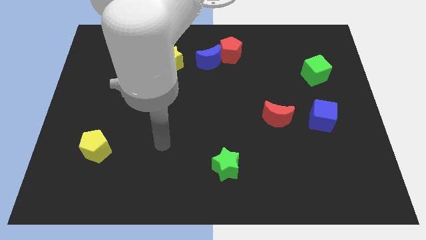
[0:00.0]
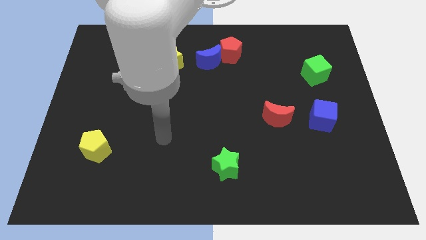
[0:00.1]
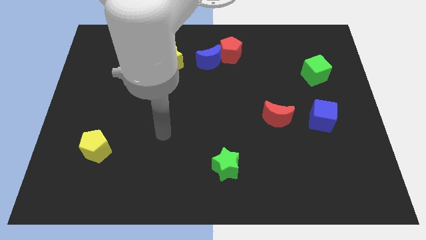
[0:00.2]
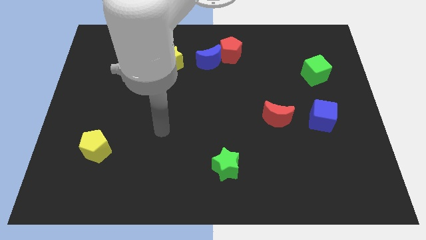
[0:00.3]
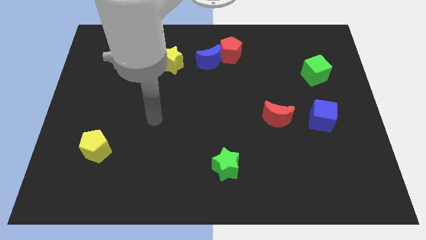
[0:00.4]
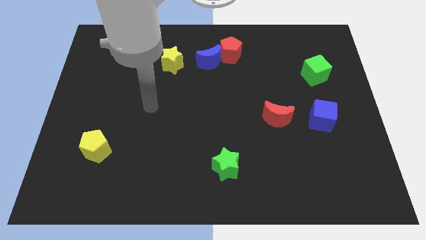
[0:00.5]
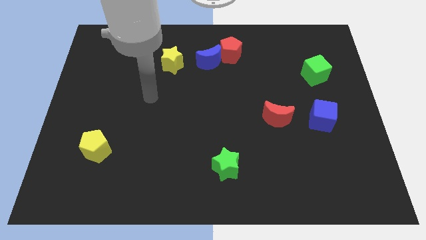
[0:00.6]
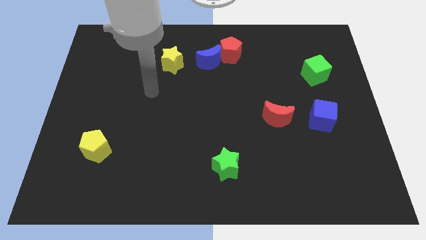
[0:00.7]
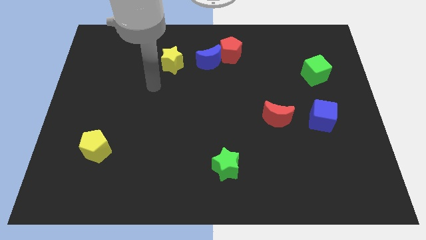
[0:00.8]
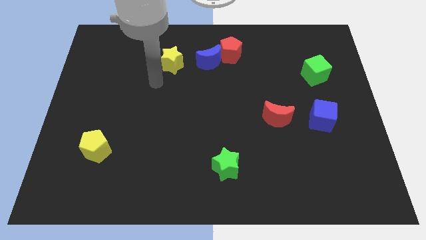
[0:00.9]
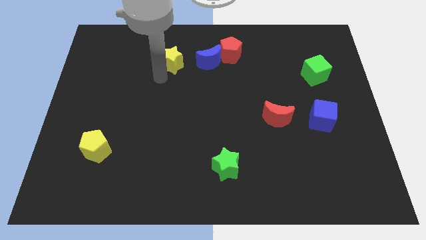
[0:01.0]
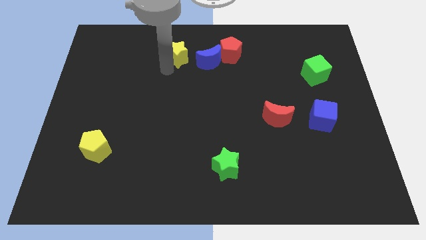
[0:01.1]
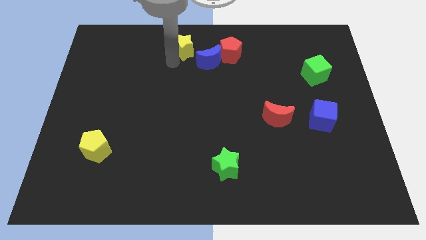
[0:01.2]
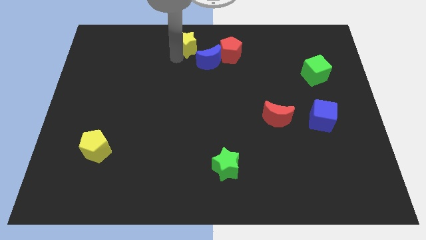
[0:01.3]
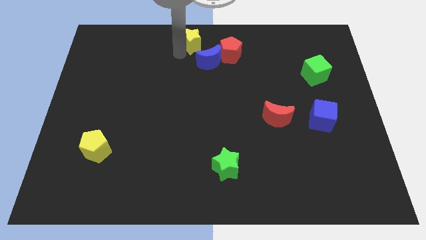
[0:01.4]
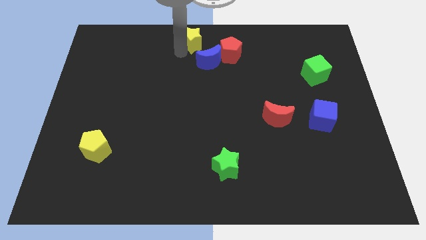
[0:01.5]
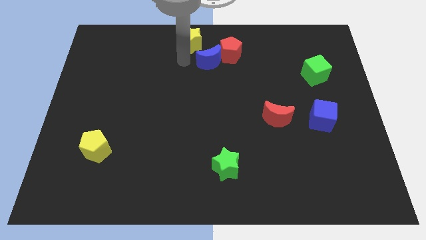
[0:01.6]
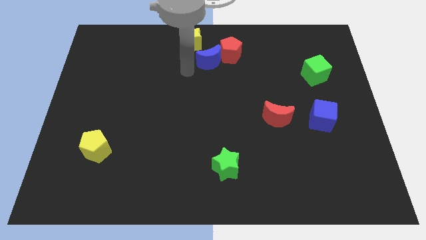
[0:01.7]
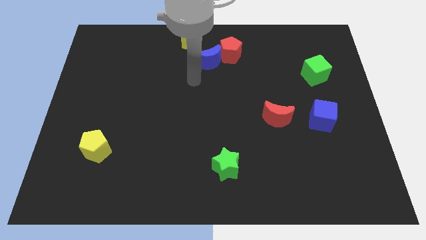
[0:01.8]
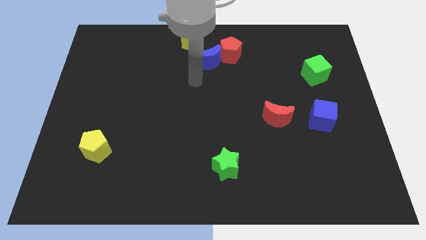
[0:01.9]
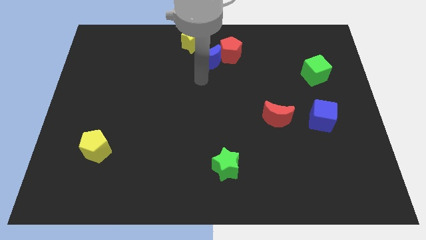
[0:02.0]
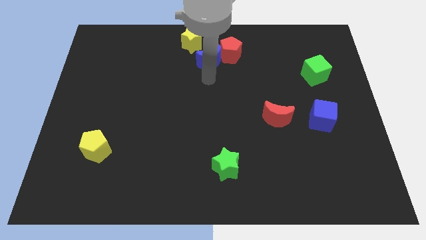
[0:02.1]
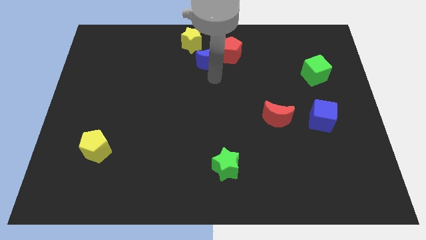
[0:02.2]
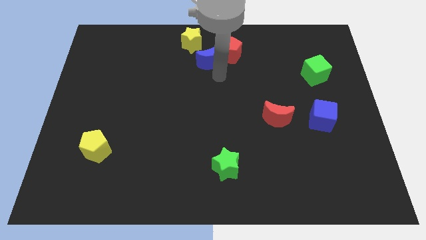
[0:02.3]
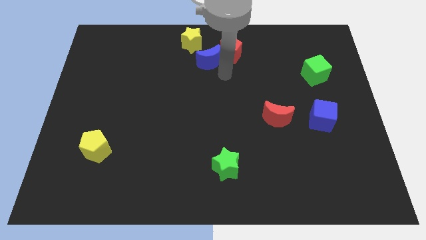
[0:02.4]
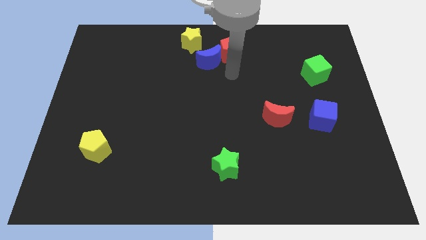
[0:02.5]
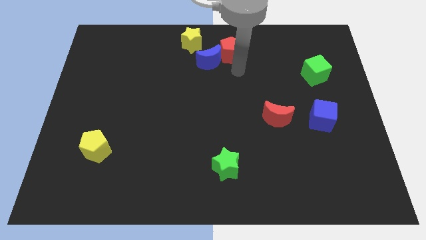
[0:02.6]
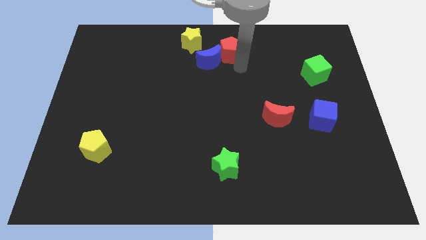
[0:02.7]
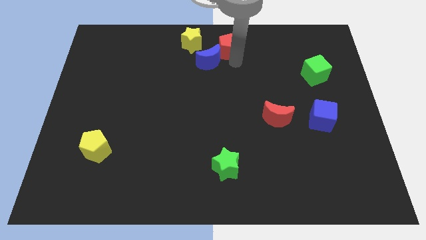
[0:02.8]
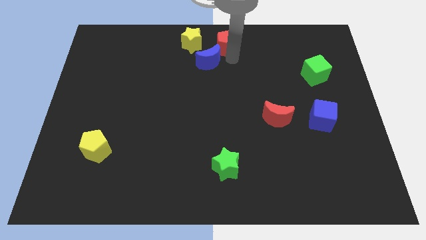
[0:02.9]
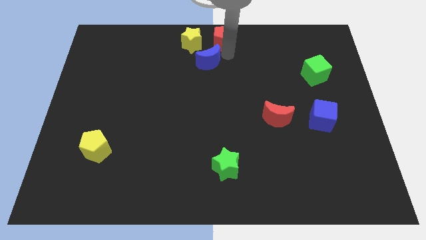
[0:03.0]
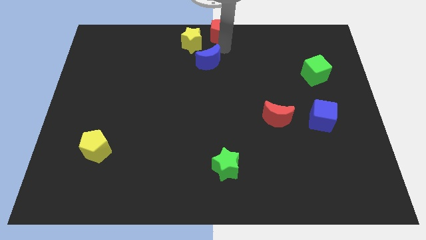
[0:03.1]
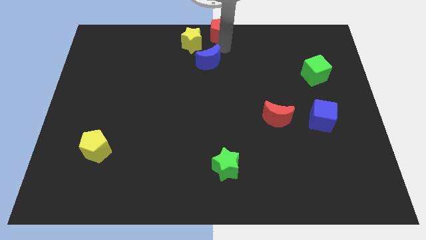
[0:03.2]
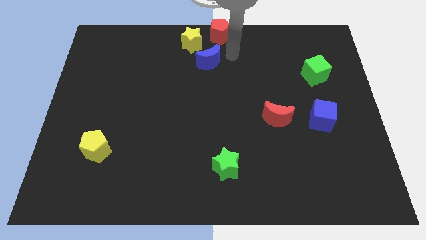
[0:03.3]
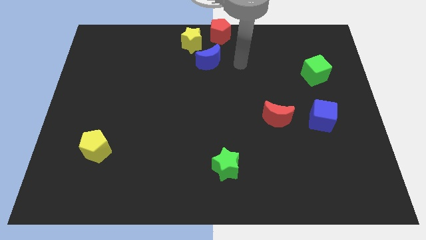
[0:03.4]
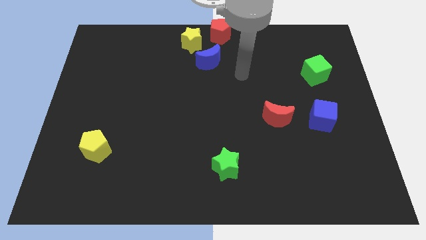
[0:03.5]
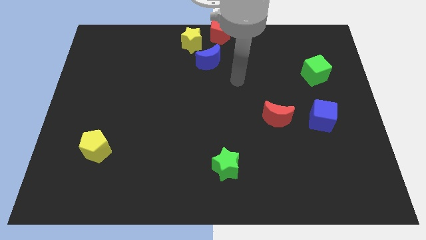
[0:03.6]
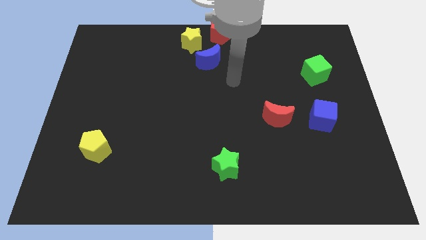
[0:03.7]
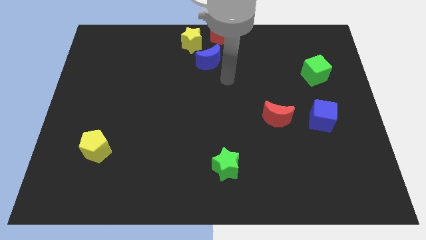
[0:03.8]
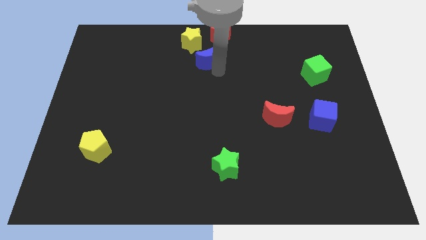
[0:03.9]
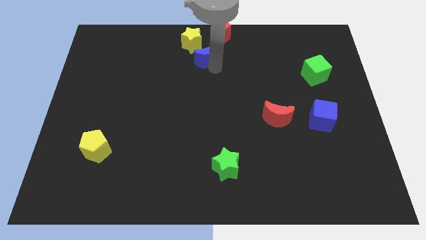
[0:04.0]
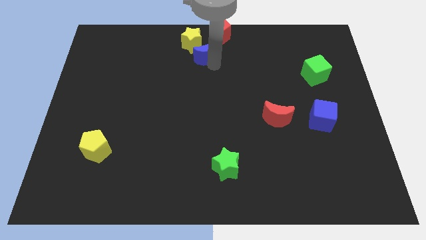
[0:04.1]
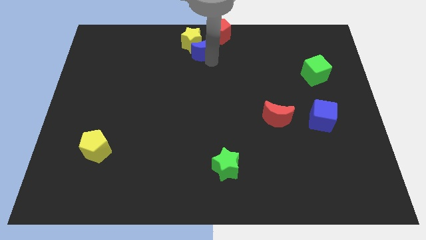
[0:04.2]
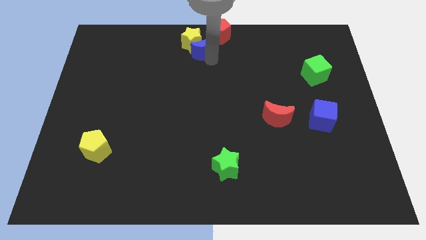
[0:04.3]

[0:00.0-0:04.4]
move the blue moon towards the top center of the board

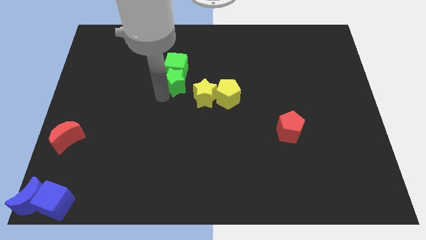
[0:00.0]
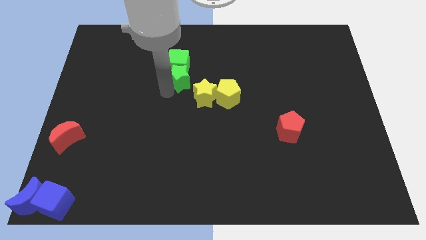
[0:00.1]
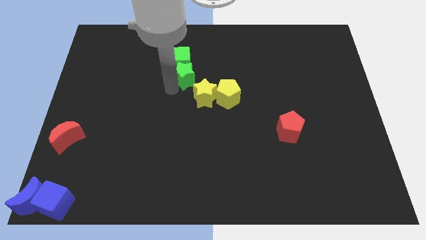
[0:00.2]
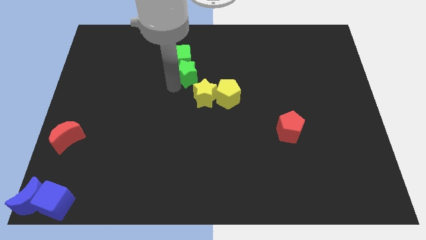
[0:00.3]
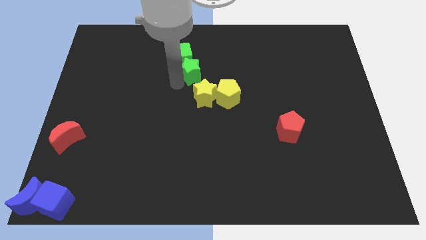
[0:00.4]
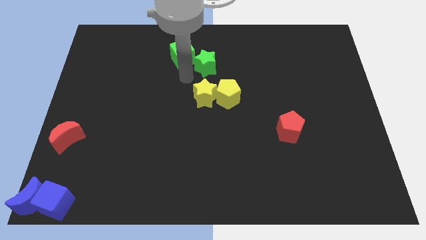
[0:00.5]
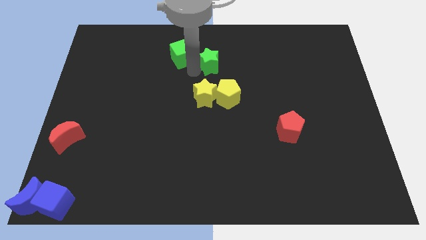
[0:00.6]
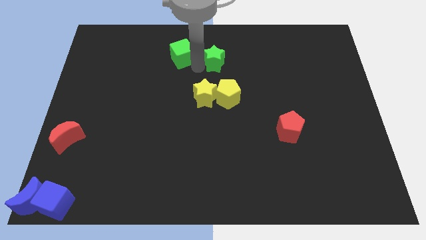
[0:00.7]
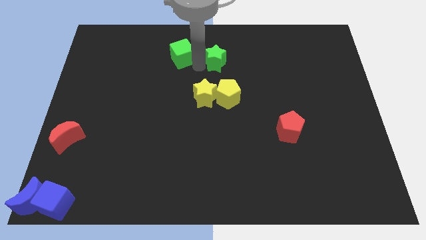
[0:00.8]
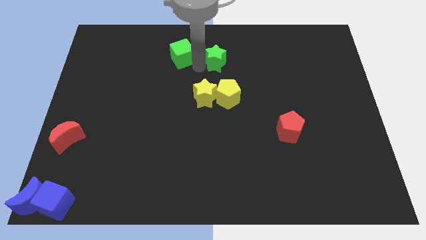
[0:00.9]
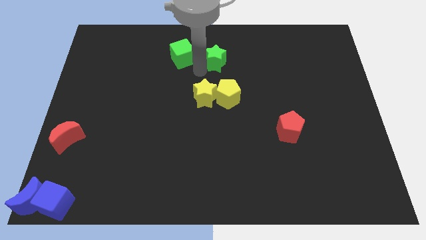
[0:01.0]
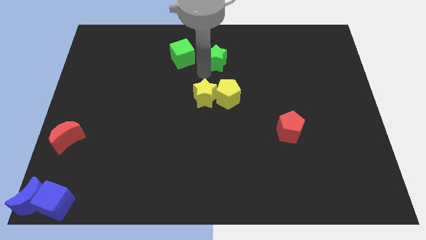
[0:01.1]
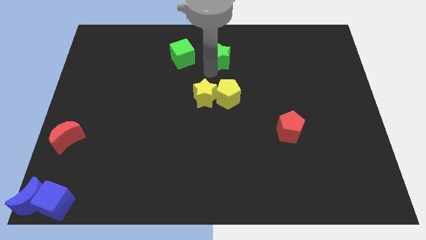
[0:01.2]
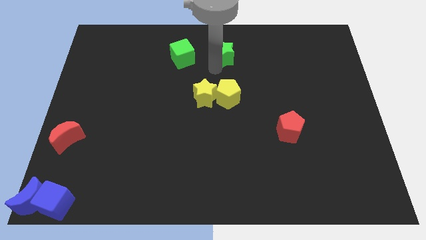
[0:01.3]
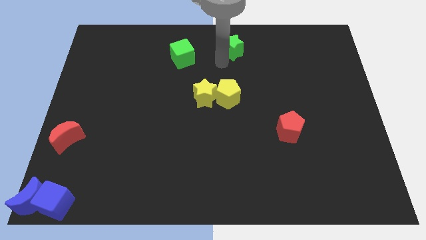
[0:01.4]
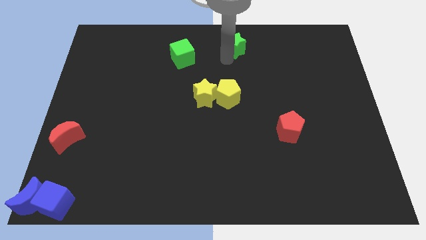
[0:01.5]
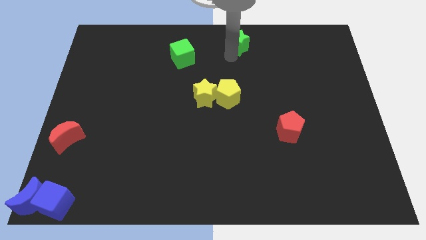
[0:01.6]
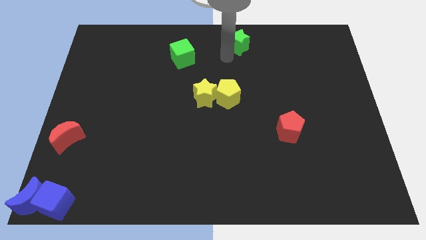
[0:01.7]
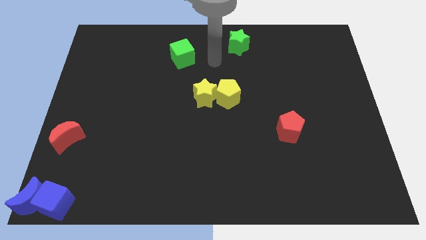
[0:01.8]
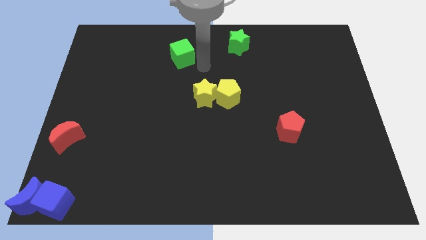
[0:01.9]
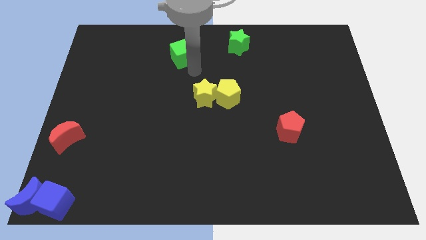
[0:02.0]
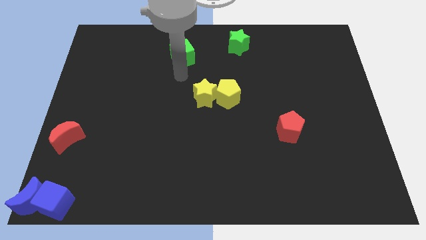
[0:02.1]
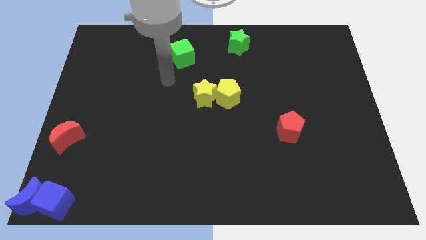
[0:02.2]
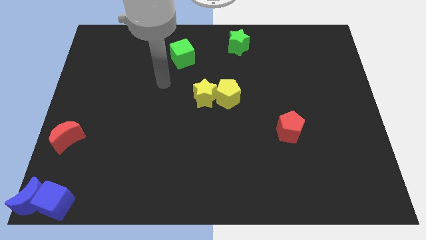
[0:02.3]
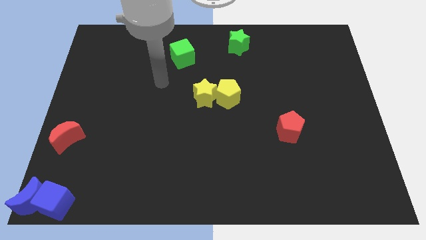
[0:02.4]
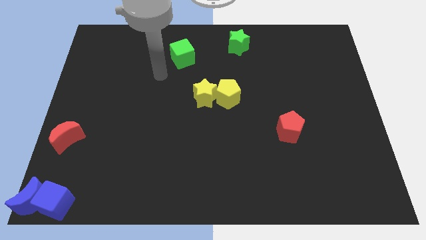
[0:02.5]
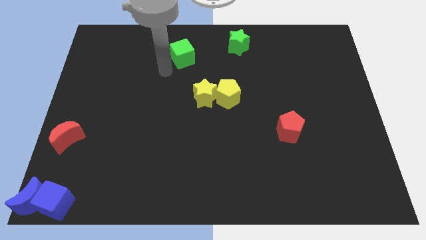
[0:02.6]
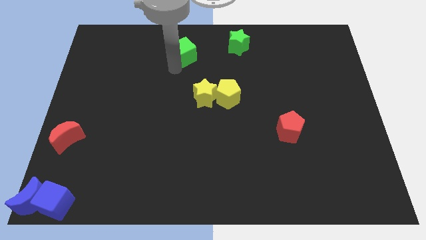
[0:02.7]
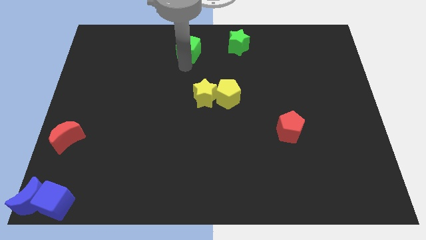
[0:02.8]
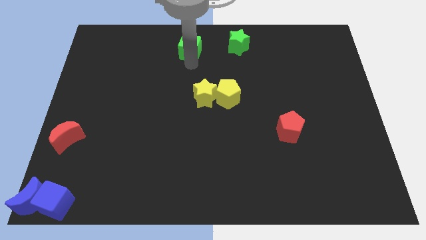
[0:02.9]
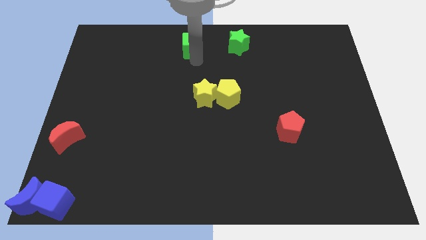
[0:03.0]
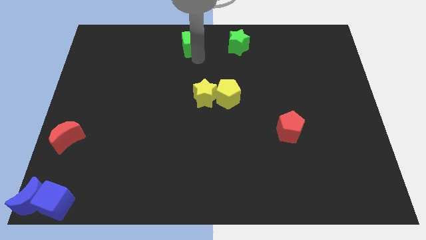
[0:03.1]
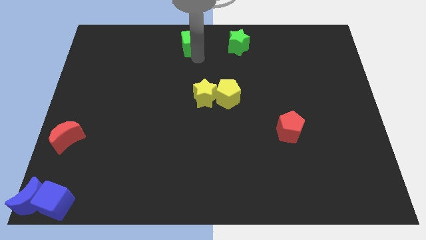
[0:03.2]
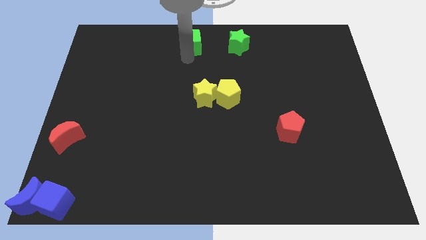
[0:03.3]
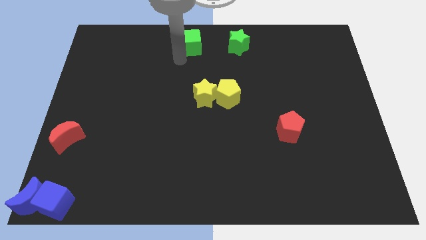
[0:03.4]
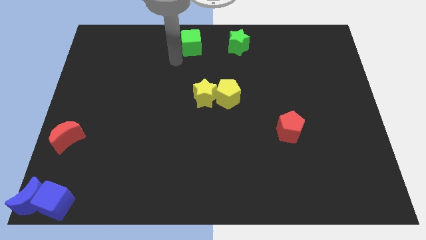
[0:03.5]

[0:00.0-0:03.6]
separate the green cube and green star from each other

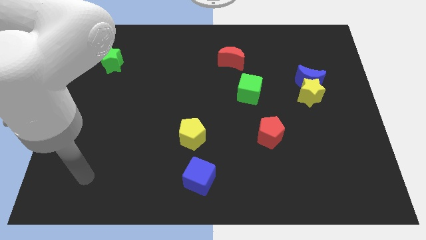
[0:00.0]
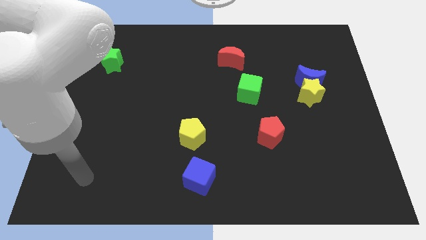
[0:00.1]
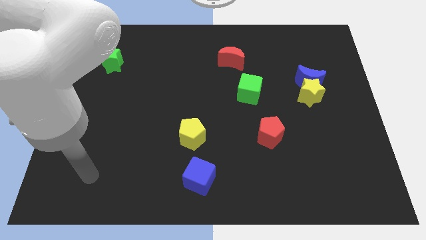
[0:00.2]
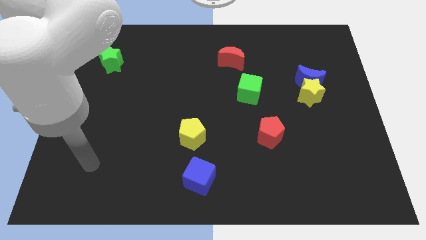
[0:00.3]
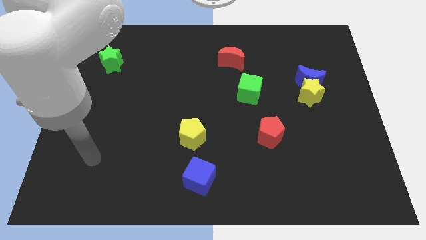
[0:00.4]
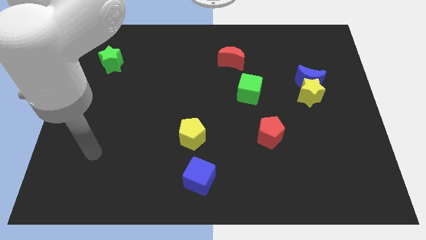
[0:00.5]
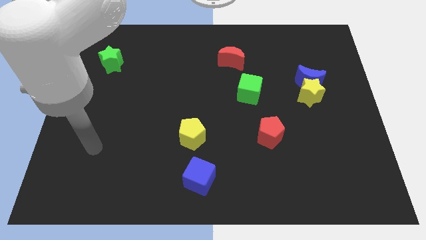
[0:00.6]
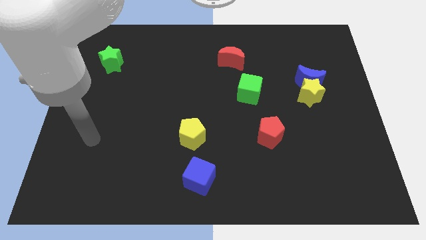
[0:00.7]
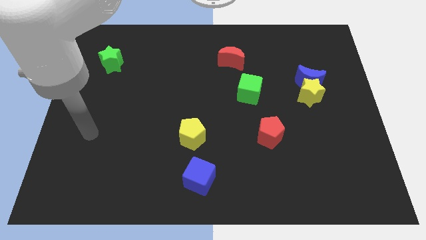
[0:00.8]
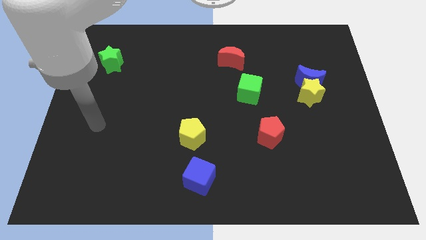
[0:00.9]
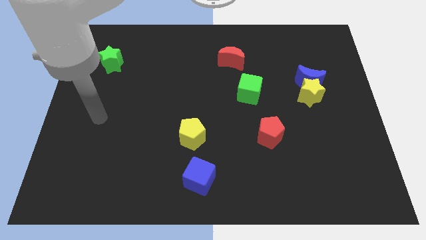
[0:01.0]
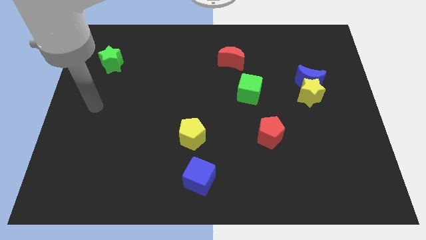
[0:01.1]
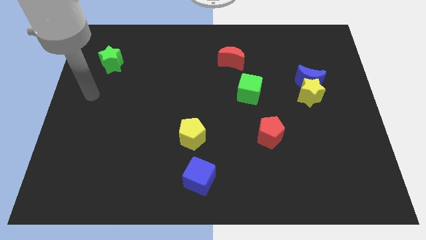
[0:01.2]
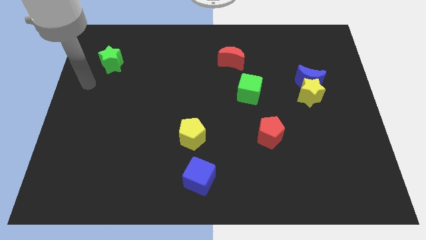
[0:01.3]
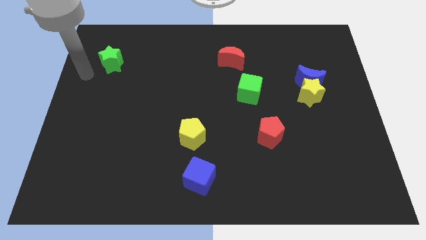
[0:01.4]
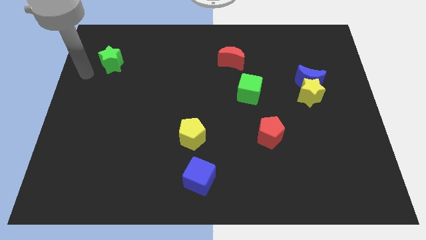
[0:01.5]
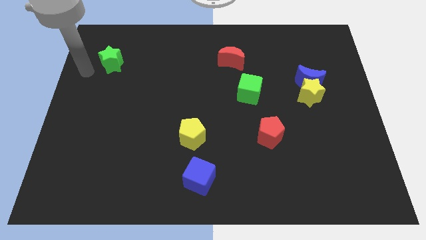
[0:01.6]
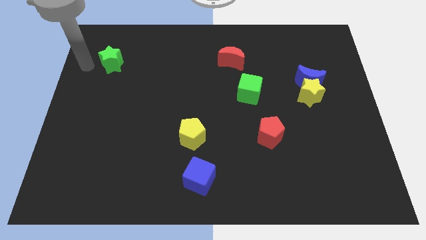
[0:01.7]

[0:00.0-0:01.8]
move yourself to the left side of the green star
